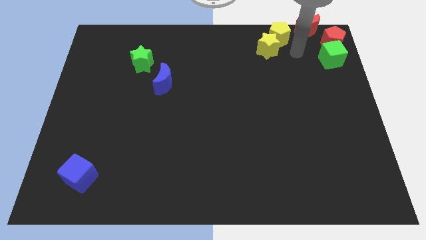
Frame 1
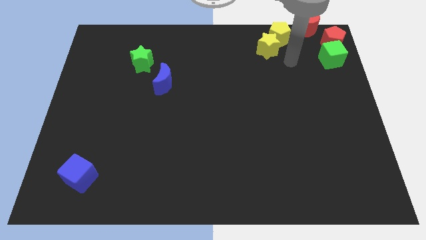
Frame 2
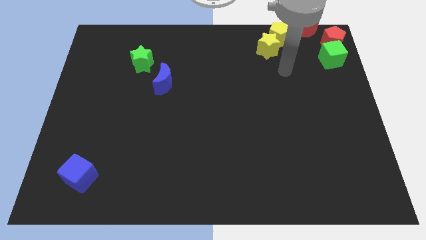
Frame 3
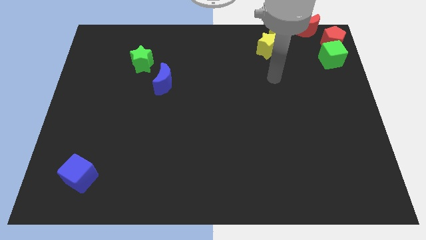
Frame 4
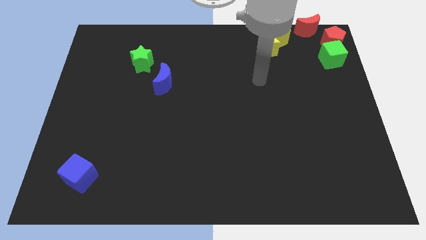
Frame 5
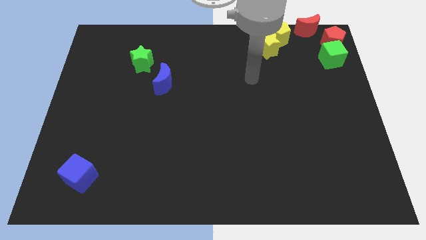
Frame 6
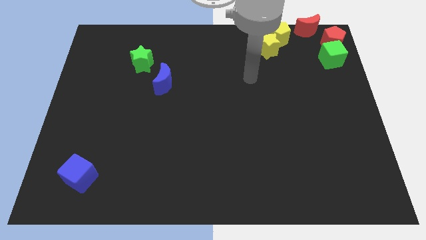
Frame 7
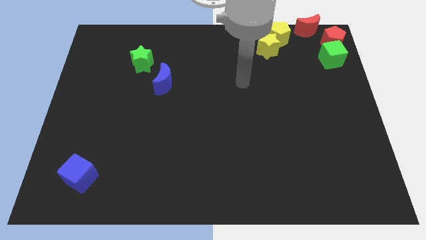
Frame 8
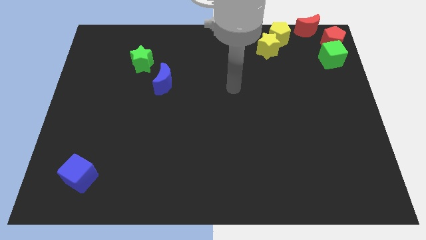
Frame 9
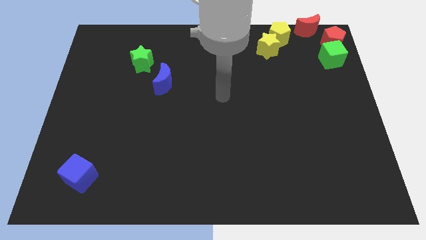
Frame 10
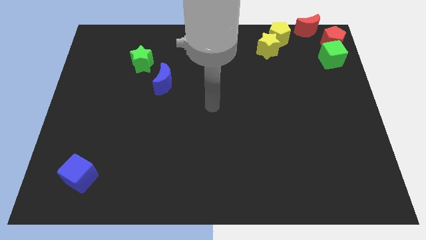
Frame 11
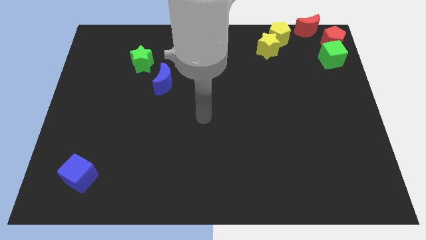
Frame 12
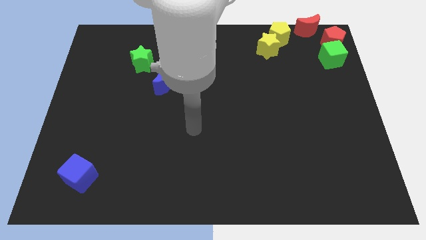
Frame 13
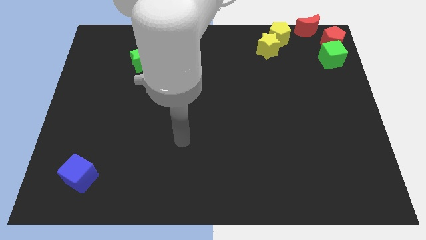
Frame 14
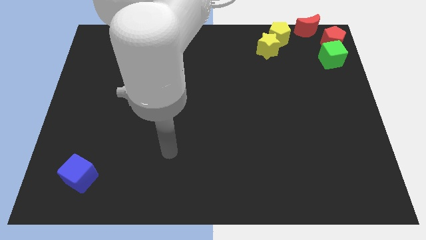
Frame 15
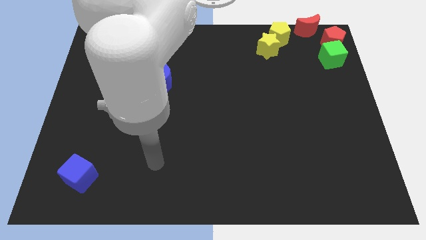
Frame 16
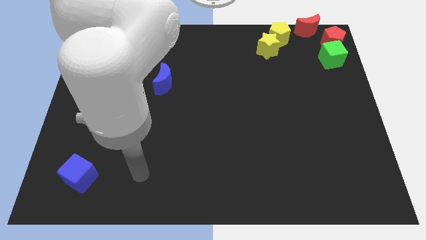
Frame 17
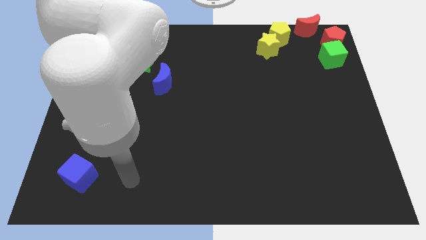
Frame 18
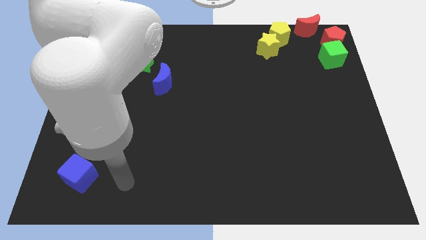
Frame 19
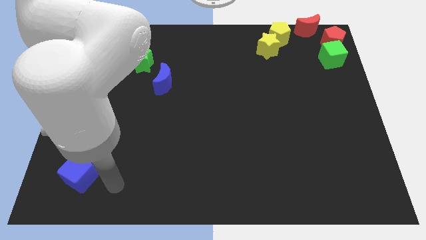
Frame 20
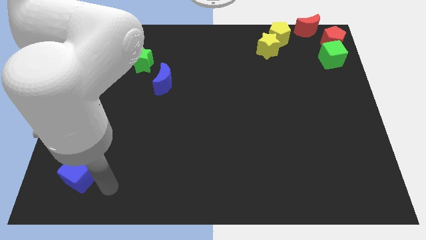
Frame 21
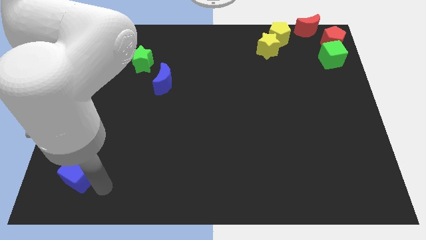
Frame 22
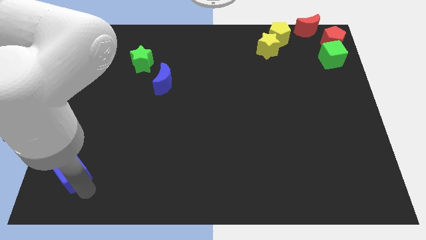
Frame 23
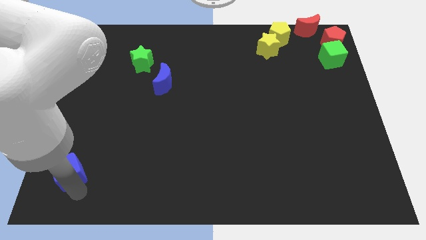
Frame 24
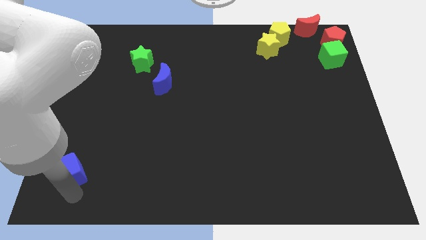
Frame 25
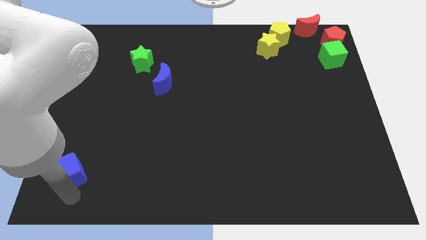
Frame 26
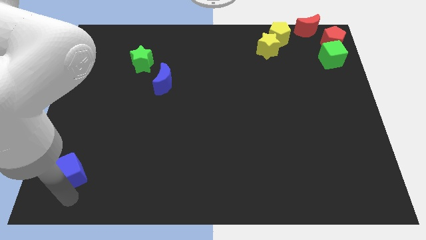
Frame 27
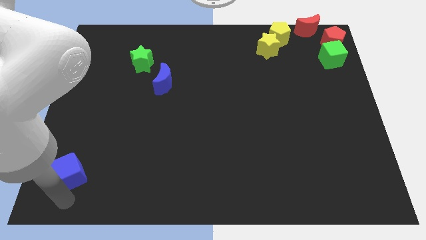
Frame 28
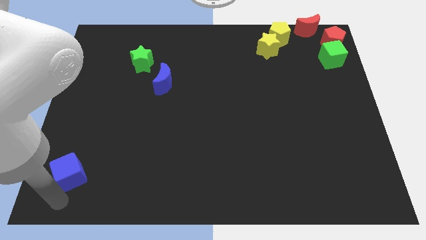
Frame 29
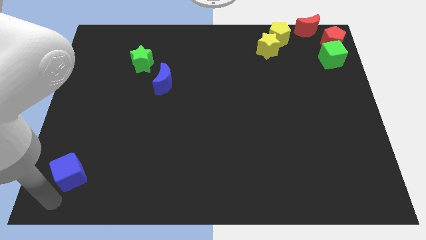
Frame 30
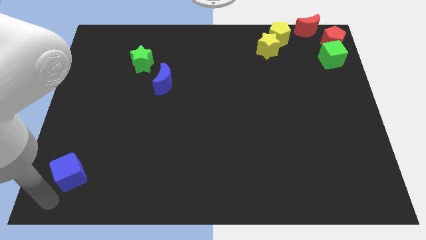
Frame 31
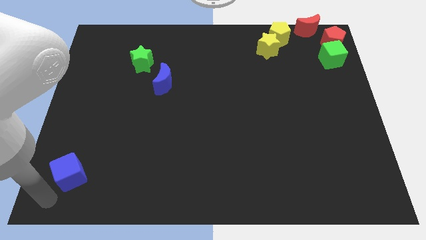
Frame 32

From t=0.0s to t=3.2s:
slightly move the blue cube to the top of the board

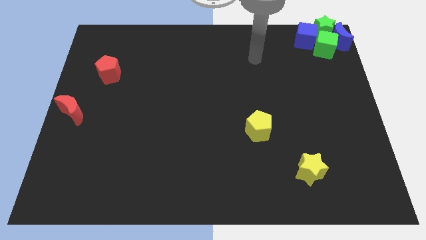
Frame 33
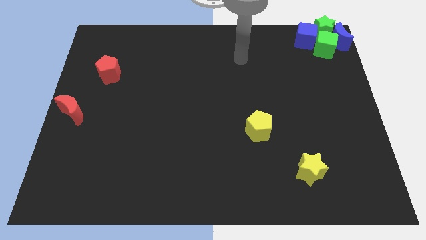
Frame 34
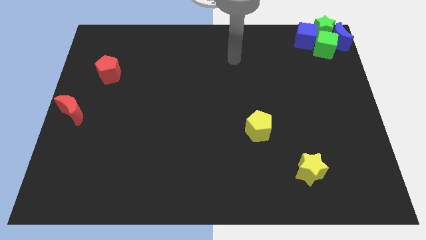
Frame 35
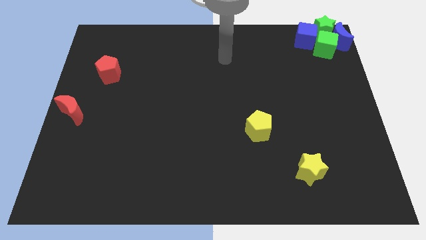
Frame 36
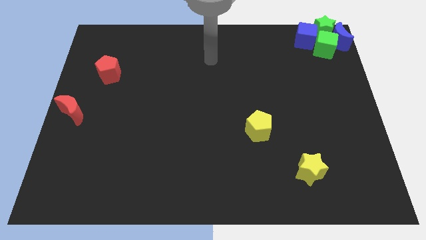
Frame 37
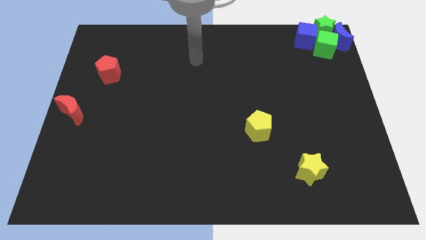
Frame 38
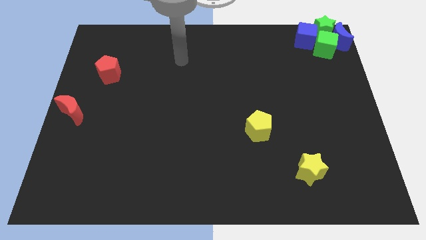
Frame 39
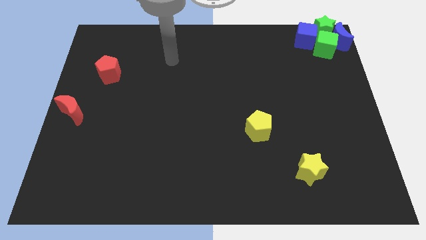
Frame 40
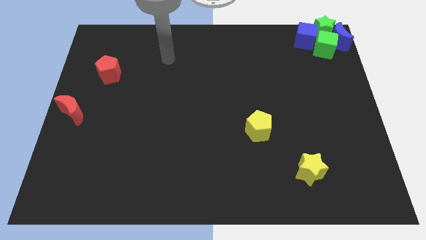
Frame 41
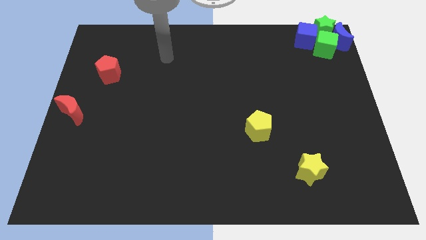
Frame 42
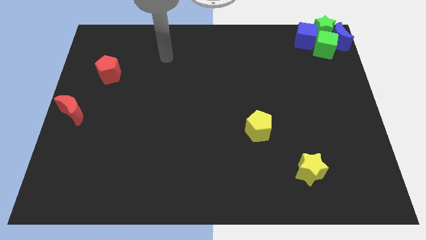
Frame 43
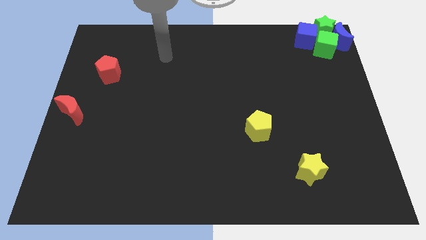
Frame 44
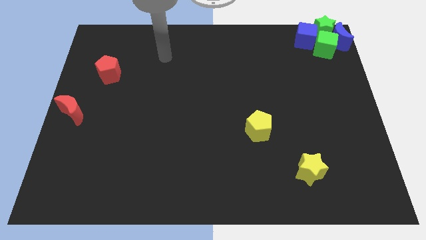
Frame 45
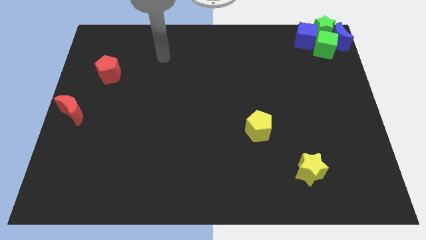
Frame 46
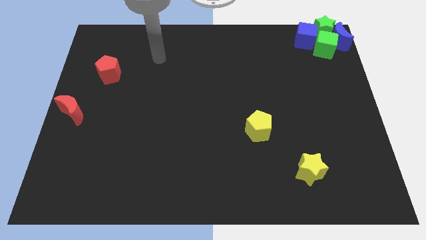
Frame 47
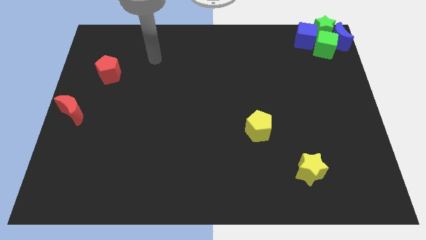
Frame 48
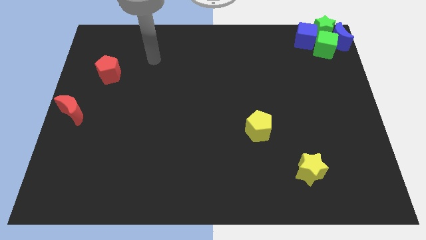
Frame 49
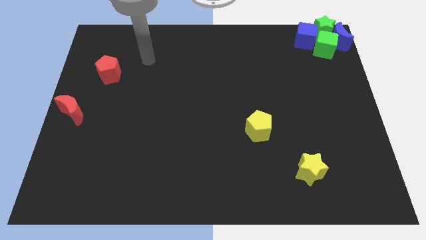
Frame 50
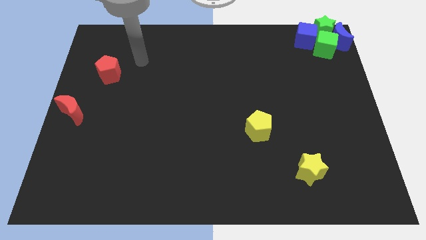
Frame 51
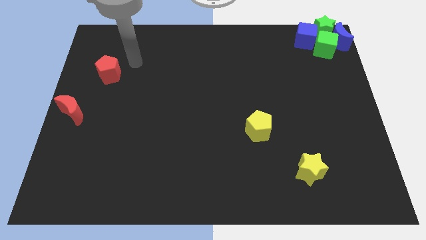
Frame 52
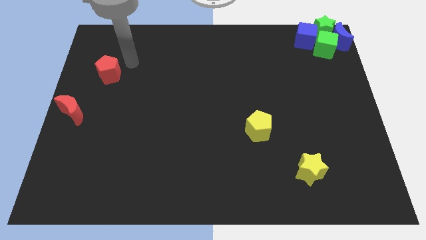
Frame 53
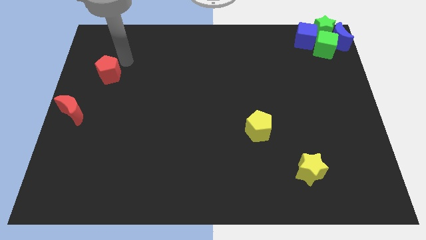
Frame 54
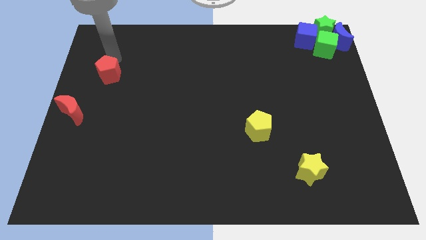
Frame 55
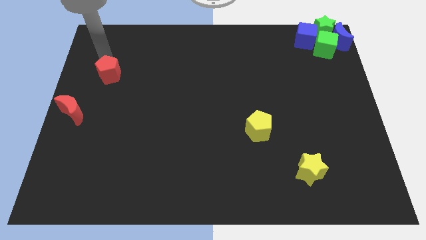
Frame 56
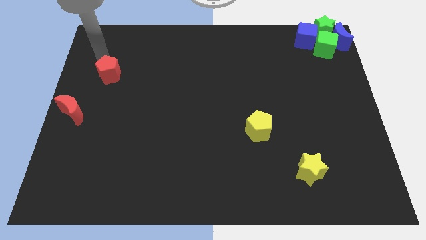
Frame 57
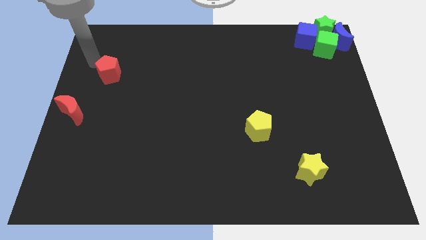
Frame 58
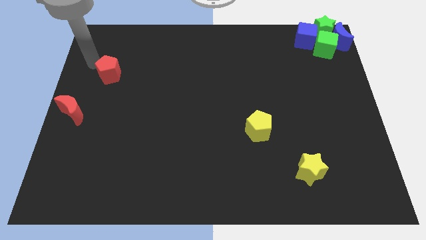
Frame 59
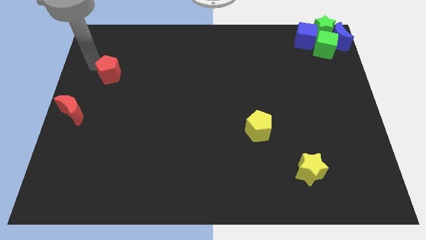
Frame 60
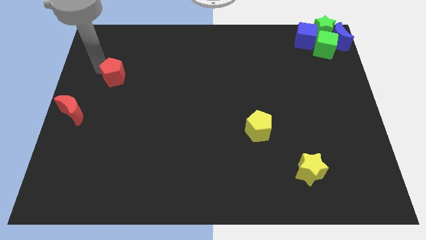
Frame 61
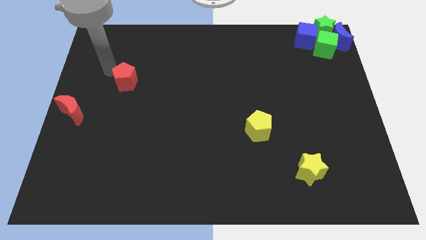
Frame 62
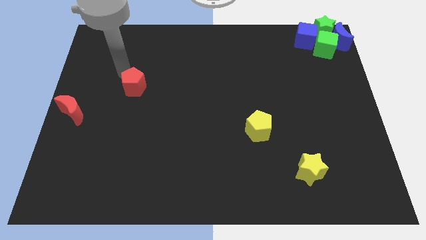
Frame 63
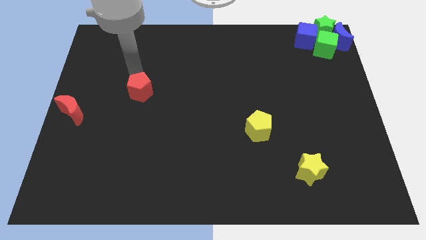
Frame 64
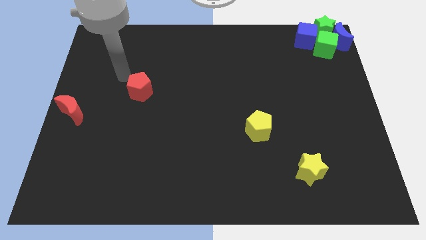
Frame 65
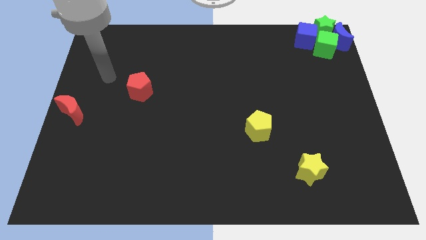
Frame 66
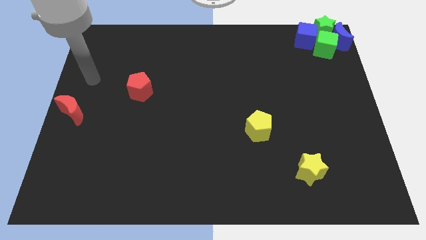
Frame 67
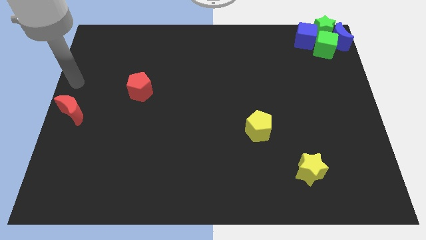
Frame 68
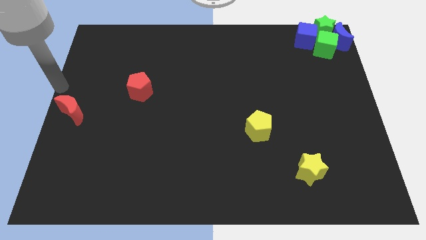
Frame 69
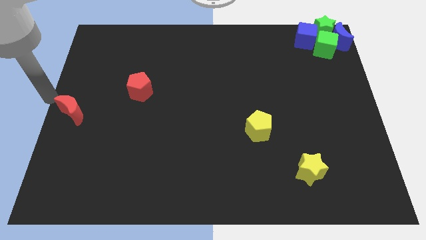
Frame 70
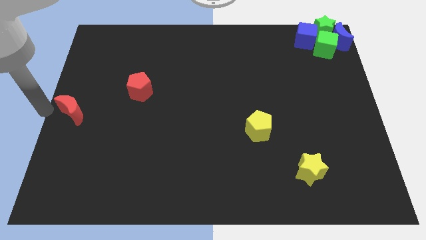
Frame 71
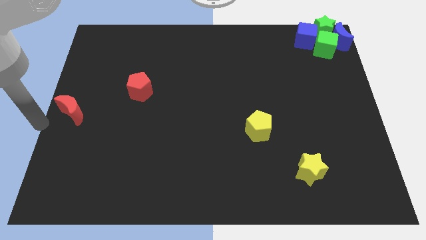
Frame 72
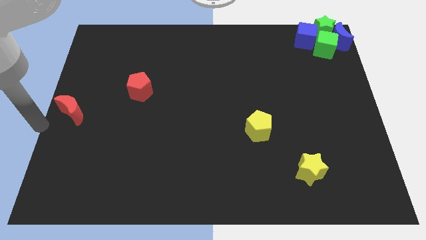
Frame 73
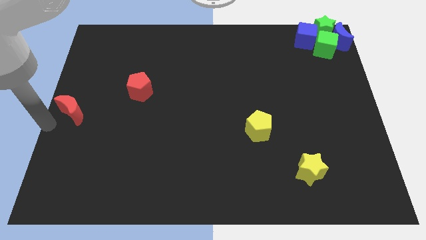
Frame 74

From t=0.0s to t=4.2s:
drag the red pentagon towards the center

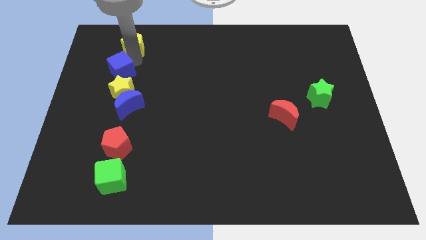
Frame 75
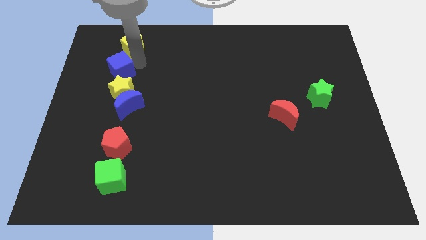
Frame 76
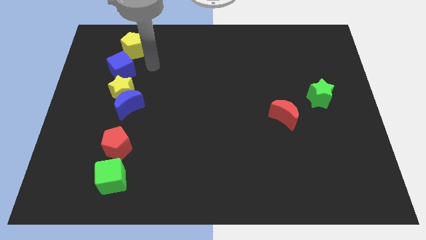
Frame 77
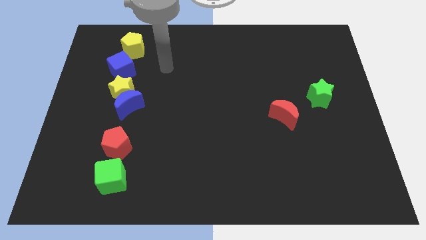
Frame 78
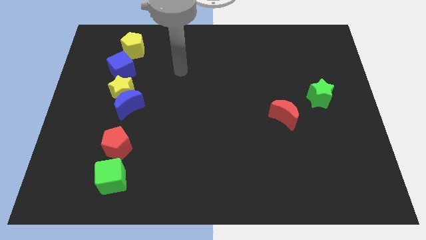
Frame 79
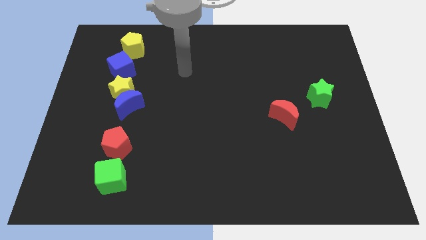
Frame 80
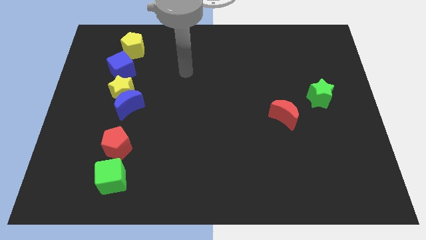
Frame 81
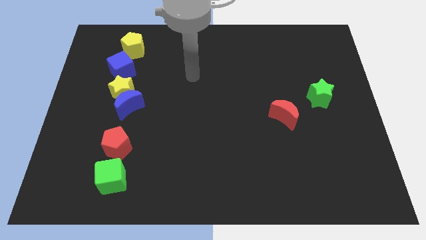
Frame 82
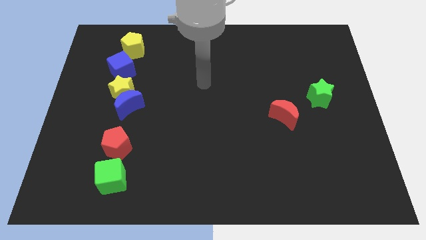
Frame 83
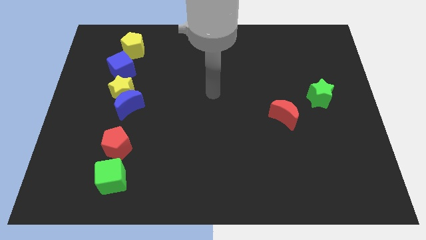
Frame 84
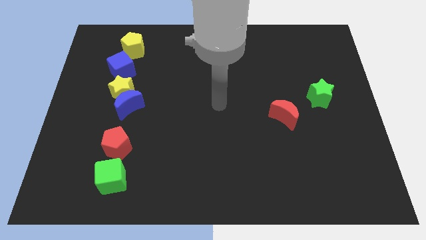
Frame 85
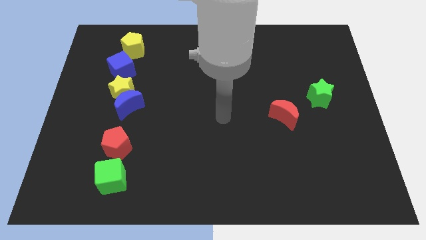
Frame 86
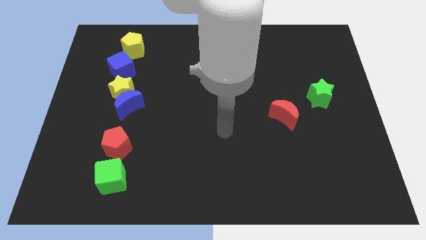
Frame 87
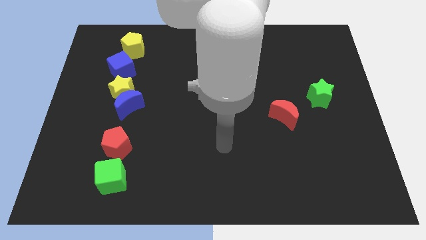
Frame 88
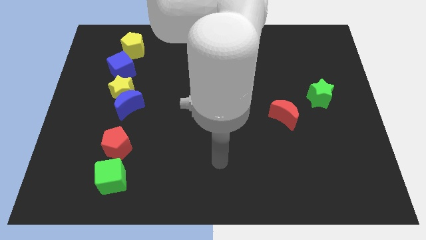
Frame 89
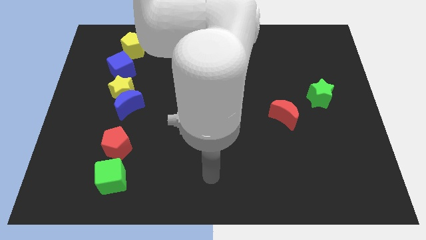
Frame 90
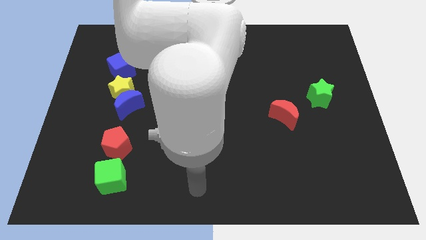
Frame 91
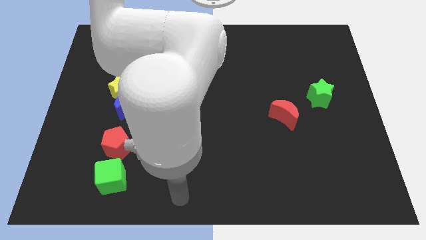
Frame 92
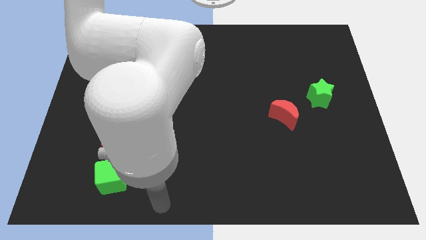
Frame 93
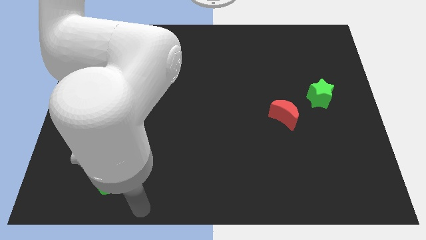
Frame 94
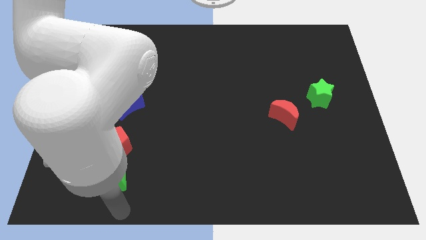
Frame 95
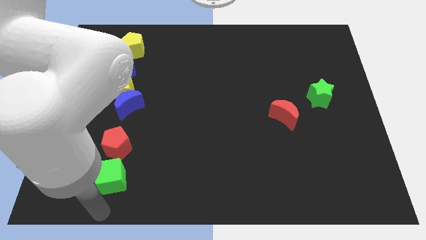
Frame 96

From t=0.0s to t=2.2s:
drag the pointer to the bottom of the board
